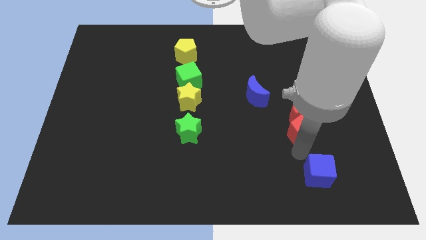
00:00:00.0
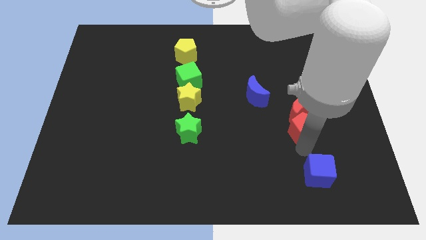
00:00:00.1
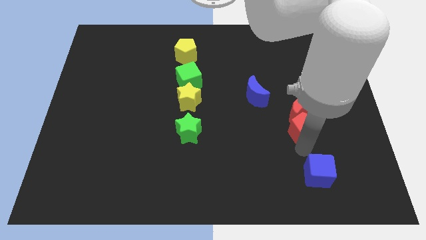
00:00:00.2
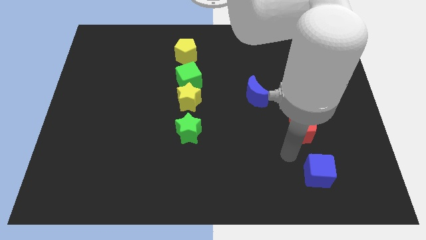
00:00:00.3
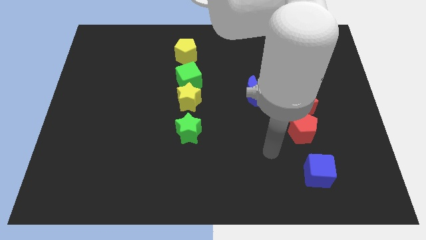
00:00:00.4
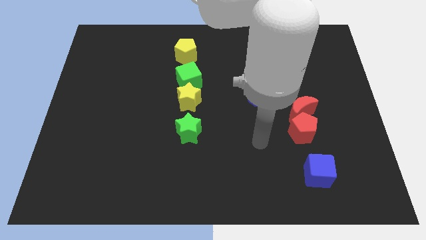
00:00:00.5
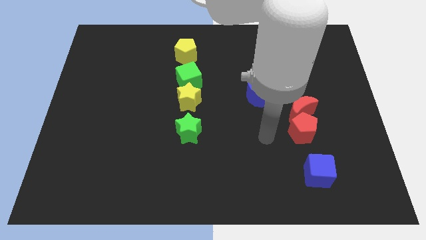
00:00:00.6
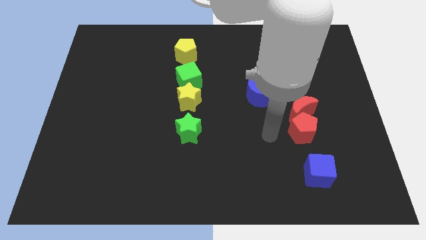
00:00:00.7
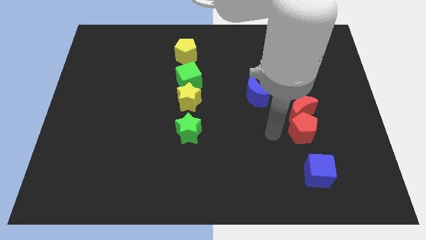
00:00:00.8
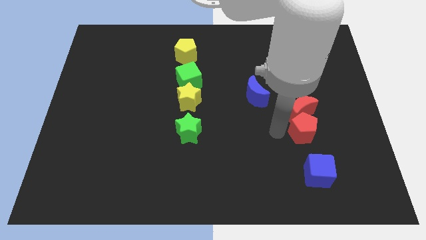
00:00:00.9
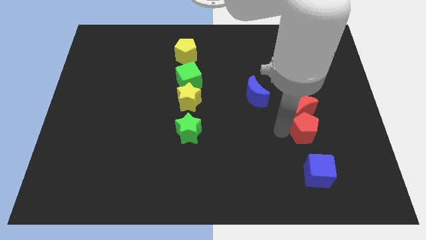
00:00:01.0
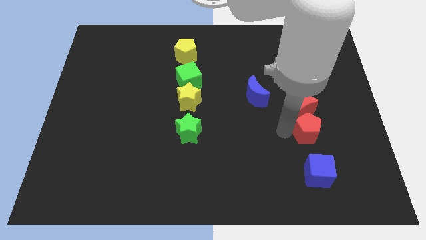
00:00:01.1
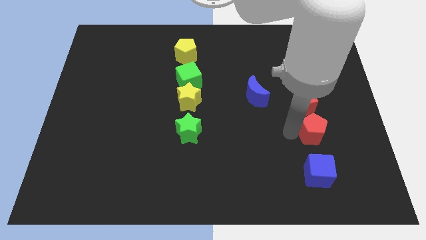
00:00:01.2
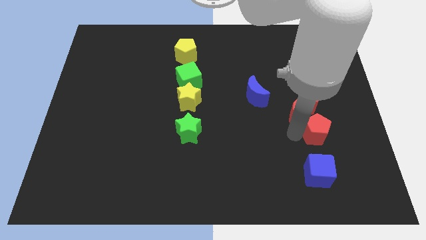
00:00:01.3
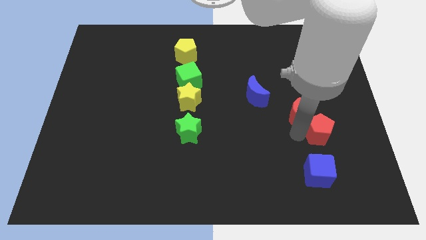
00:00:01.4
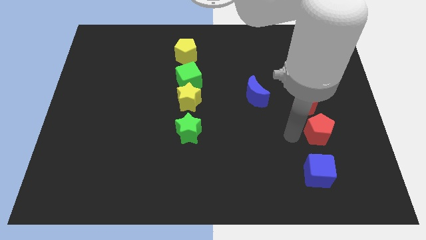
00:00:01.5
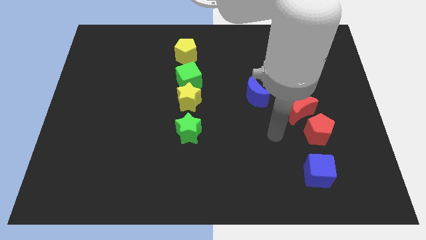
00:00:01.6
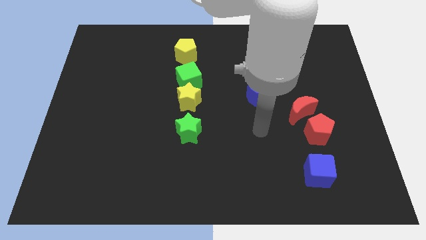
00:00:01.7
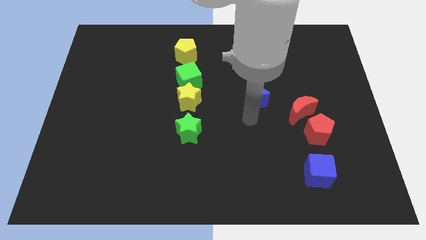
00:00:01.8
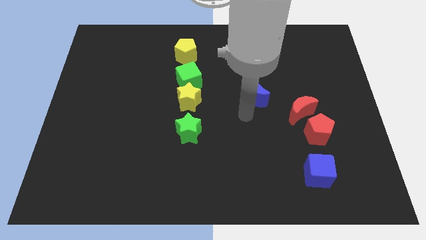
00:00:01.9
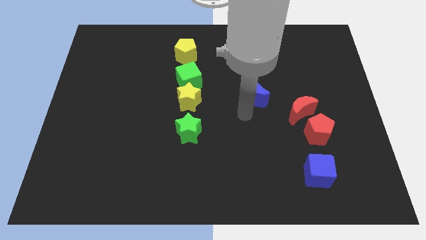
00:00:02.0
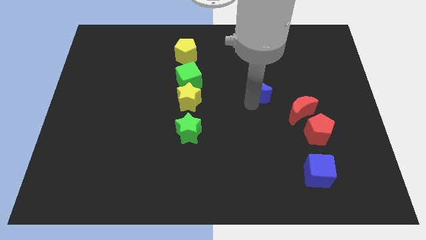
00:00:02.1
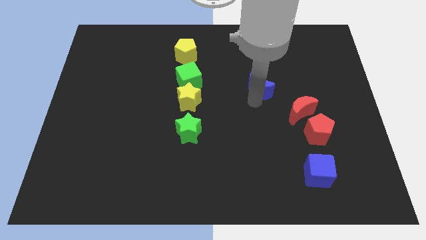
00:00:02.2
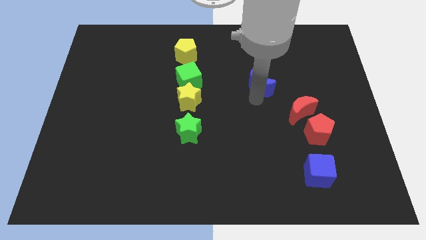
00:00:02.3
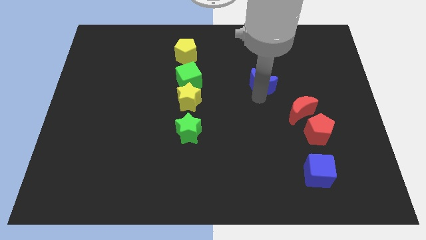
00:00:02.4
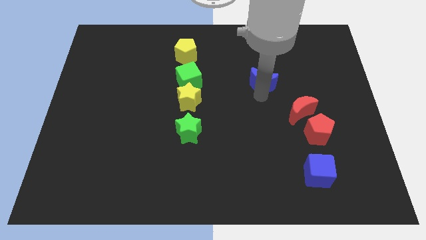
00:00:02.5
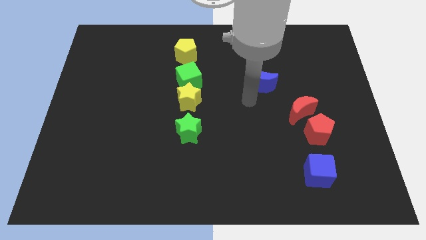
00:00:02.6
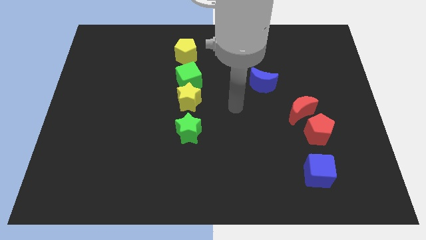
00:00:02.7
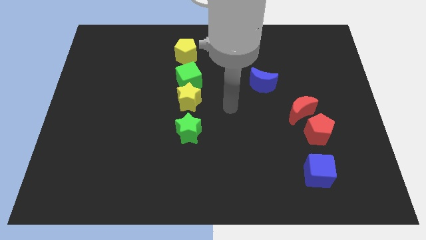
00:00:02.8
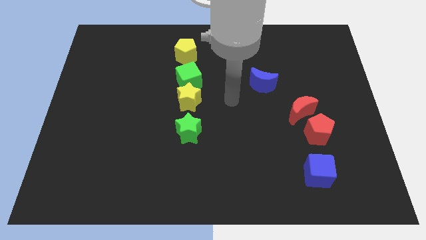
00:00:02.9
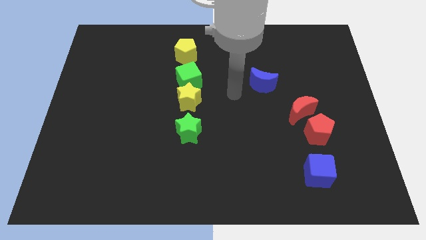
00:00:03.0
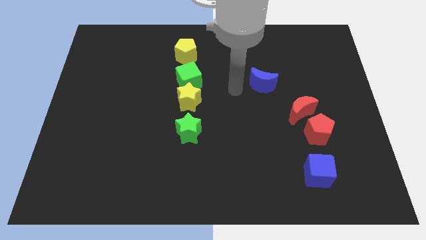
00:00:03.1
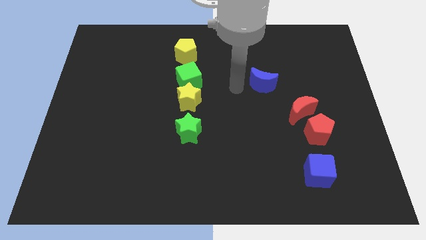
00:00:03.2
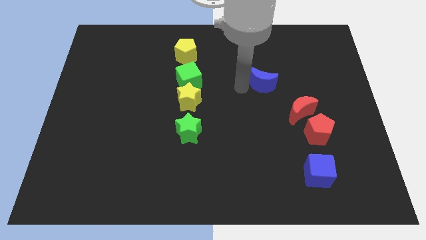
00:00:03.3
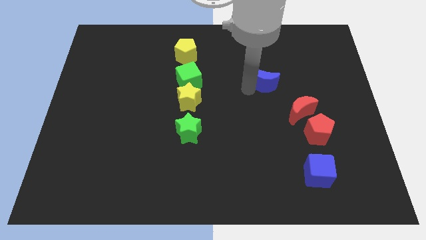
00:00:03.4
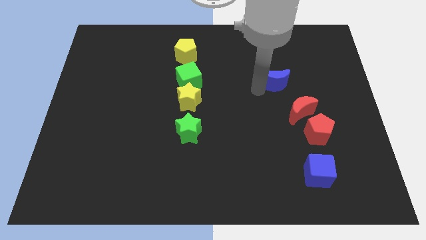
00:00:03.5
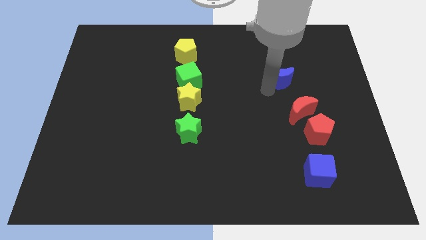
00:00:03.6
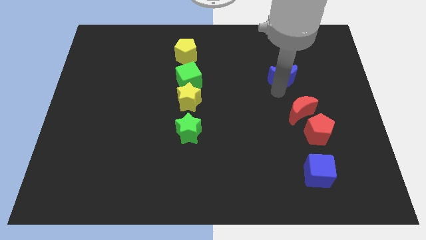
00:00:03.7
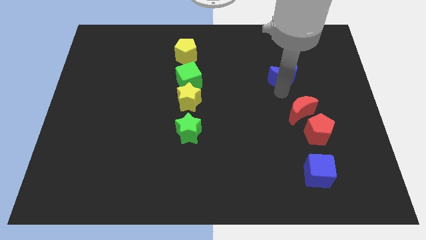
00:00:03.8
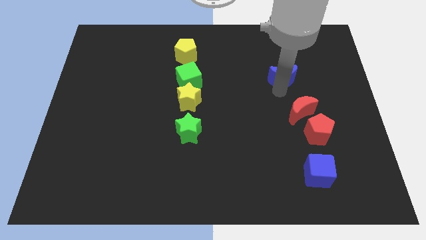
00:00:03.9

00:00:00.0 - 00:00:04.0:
slightly move the blue crescent towards the right of the board

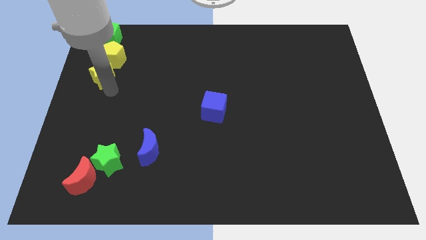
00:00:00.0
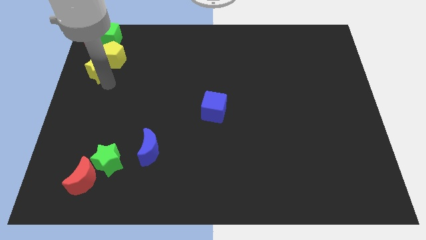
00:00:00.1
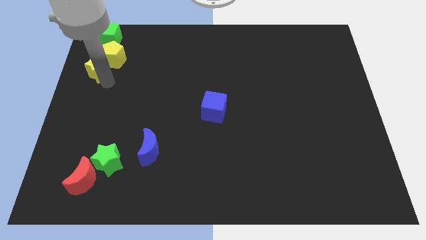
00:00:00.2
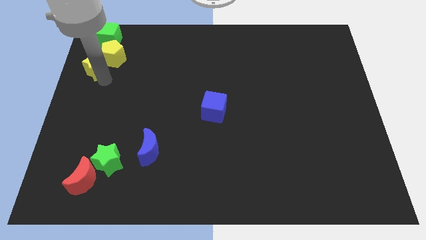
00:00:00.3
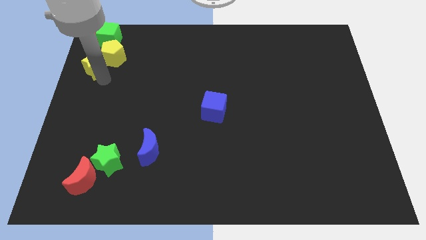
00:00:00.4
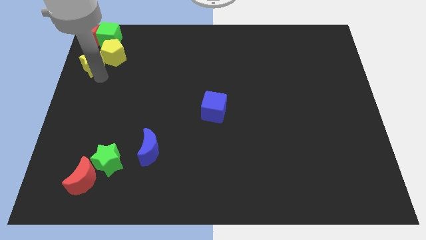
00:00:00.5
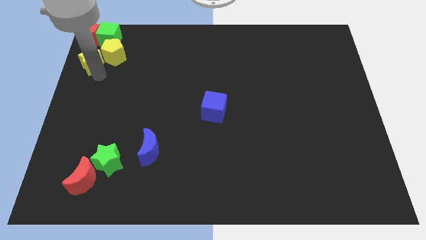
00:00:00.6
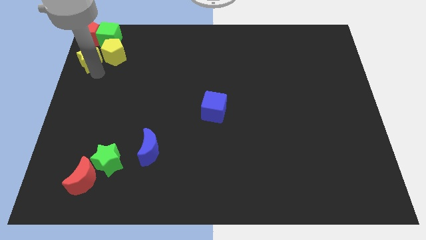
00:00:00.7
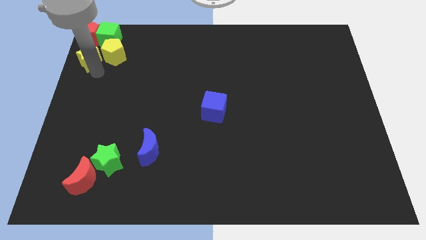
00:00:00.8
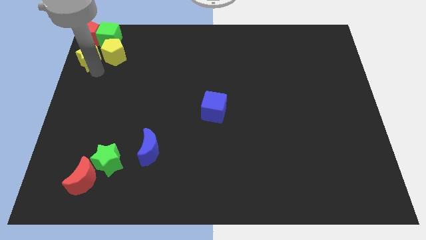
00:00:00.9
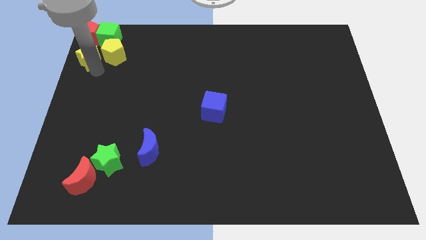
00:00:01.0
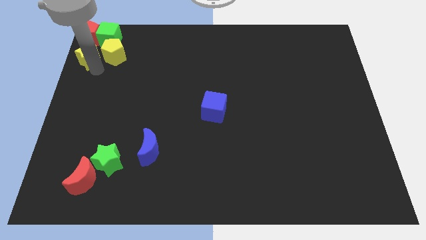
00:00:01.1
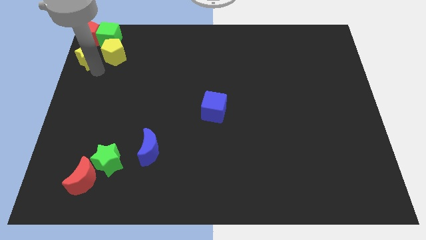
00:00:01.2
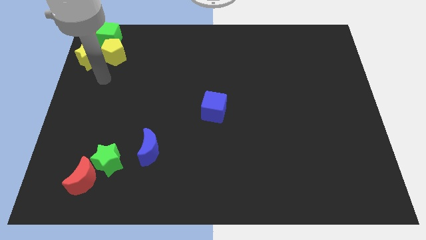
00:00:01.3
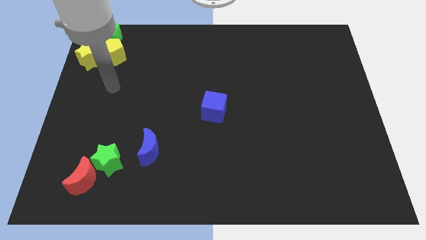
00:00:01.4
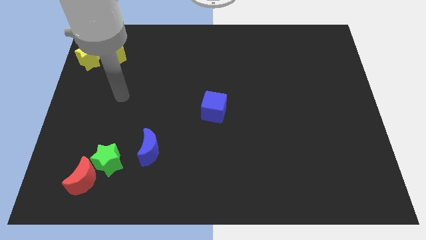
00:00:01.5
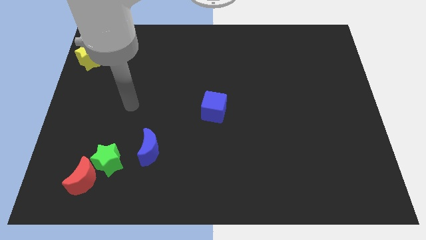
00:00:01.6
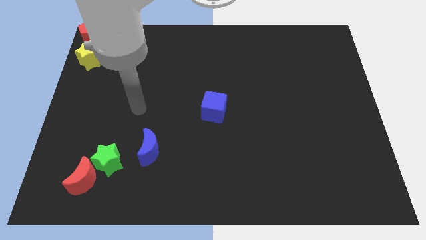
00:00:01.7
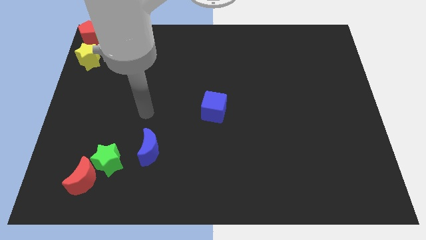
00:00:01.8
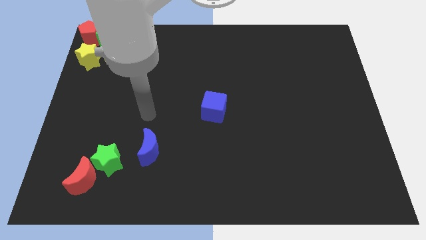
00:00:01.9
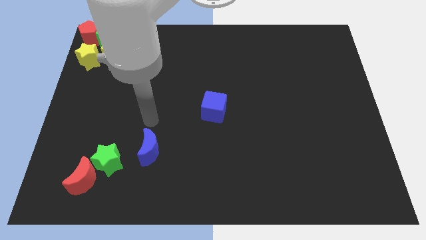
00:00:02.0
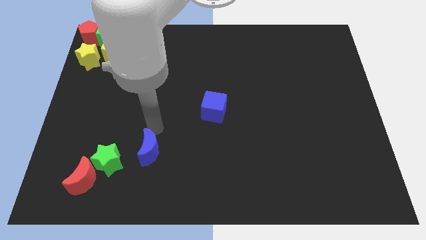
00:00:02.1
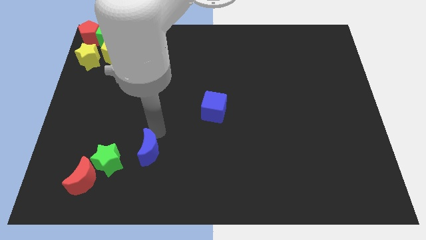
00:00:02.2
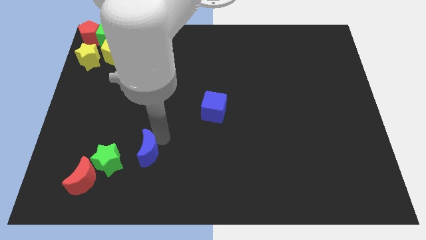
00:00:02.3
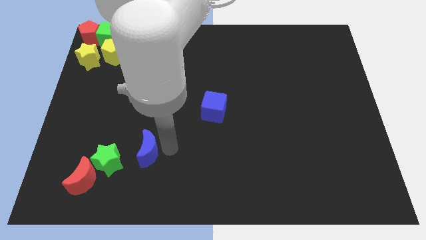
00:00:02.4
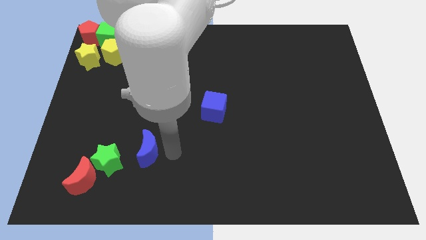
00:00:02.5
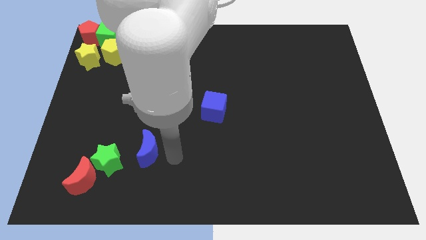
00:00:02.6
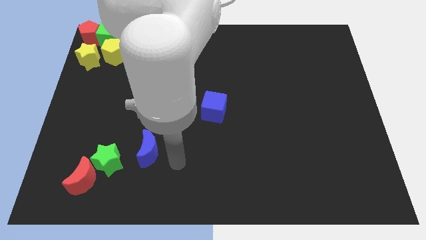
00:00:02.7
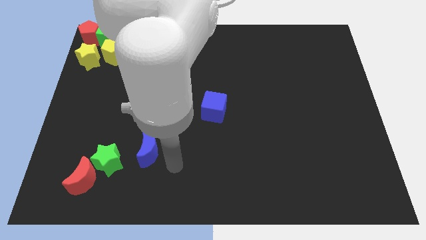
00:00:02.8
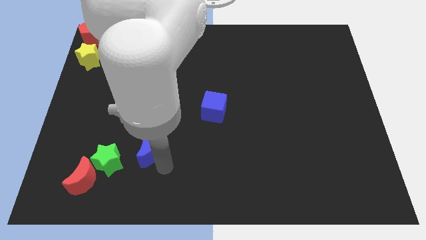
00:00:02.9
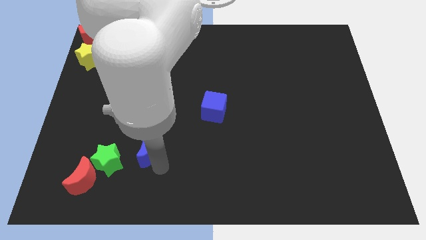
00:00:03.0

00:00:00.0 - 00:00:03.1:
place your arm to the right of blue moon

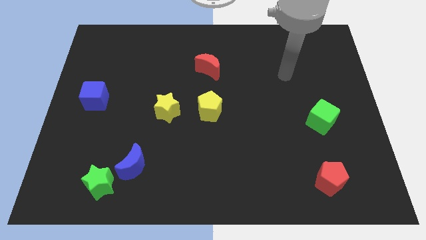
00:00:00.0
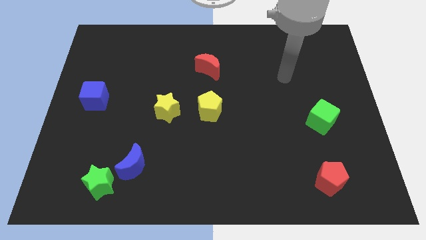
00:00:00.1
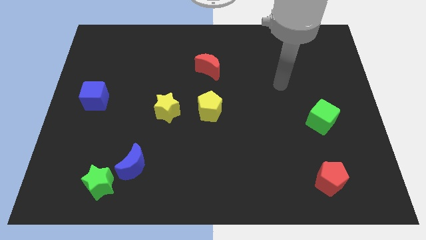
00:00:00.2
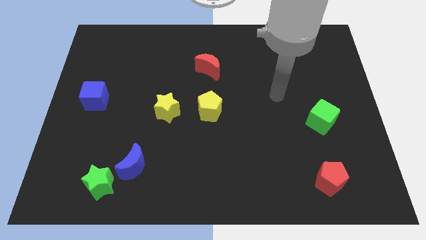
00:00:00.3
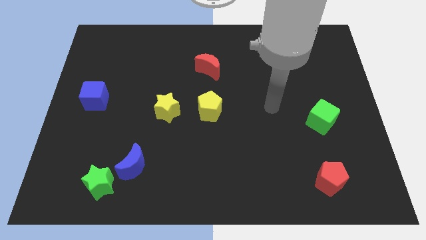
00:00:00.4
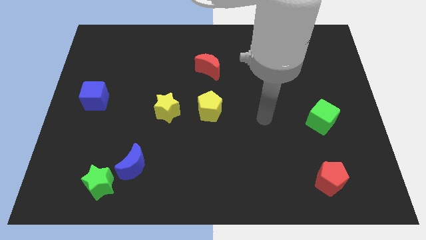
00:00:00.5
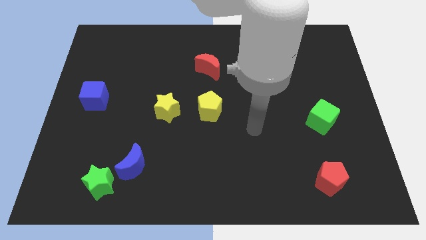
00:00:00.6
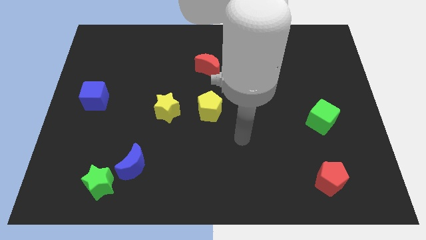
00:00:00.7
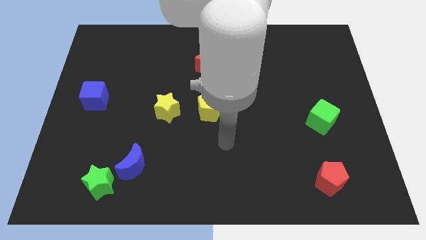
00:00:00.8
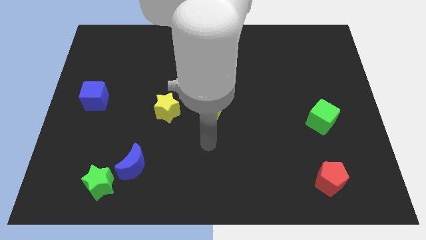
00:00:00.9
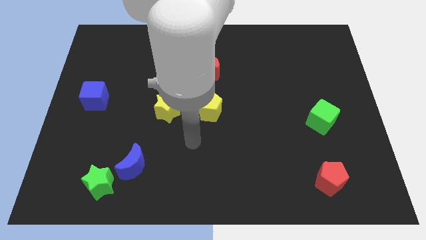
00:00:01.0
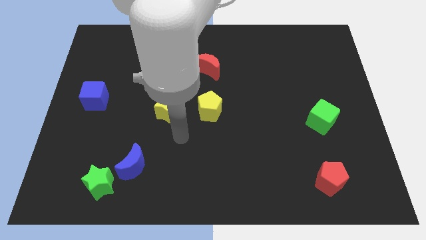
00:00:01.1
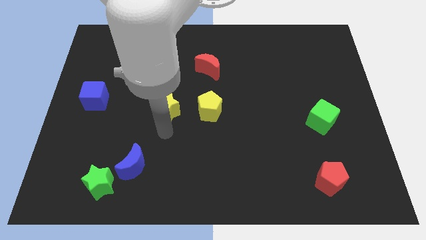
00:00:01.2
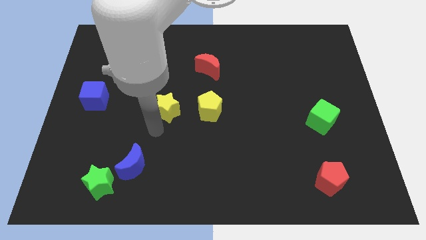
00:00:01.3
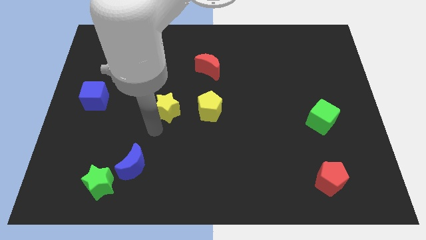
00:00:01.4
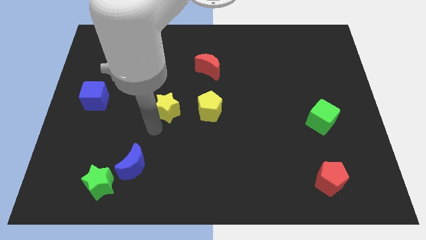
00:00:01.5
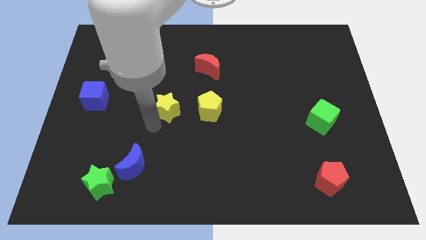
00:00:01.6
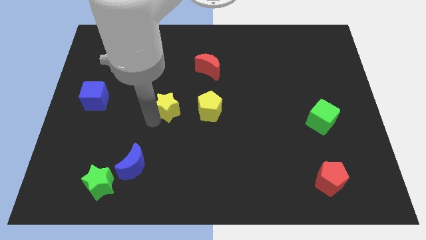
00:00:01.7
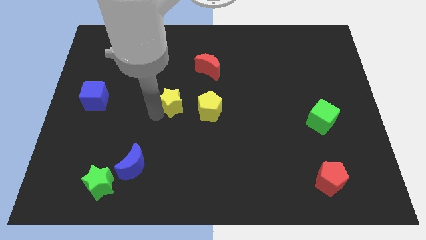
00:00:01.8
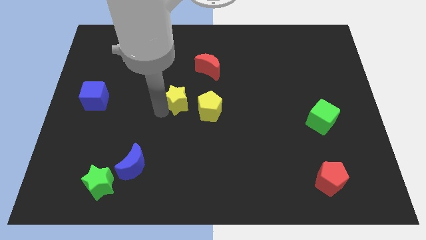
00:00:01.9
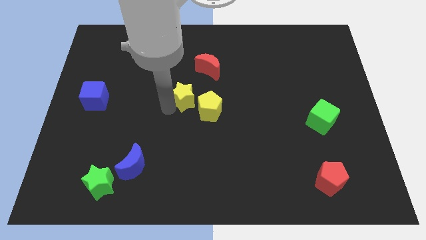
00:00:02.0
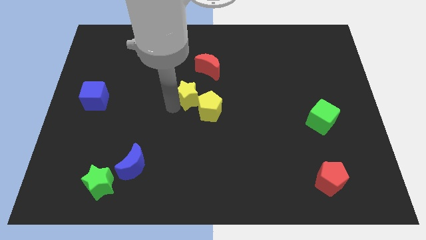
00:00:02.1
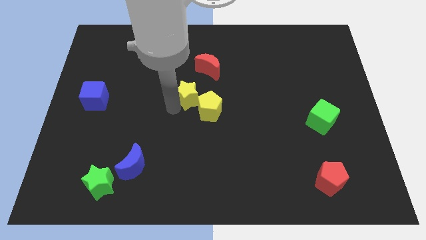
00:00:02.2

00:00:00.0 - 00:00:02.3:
place the yellow star to the left of the yellow pentagon
